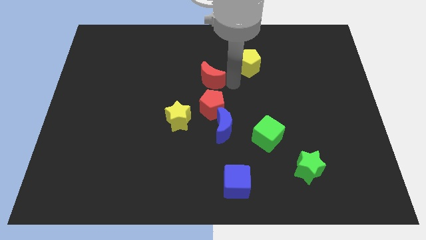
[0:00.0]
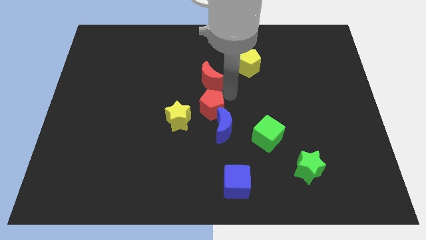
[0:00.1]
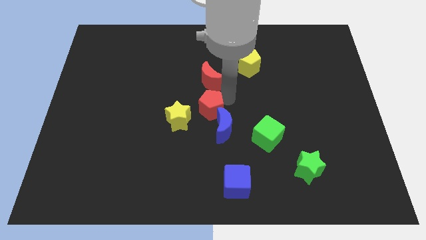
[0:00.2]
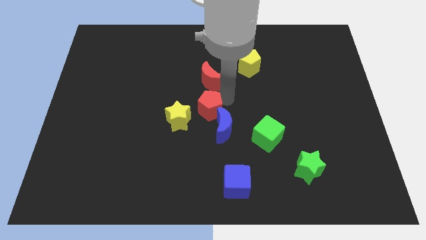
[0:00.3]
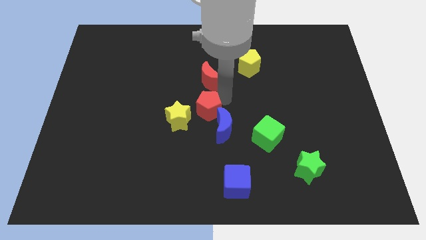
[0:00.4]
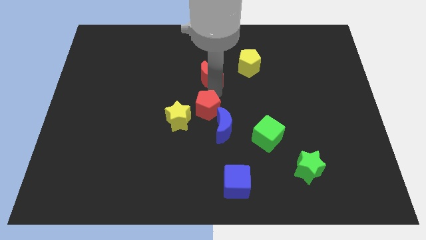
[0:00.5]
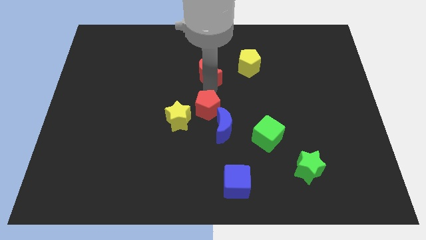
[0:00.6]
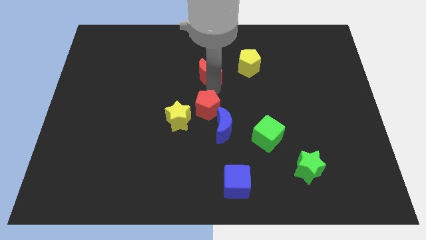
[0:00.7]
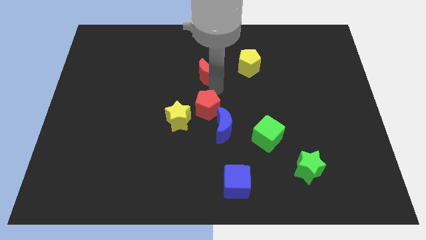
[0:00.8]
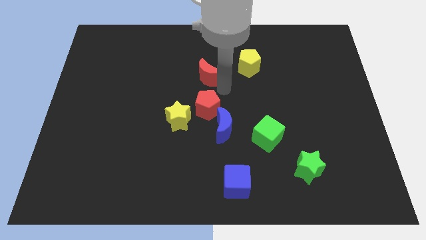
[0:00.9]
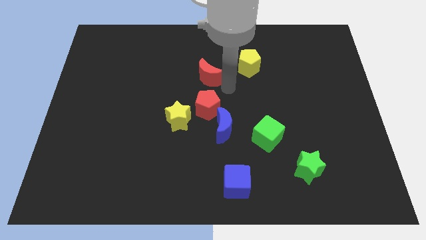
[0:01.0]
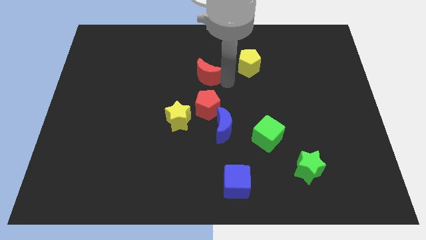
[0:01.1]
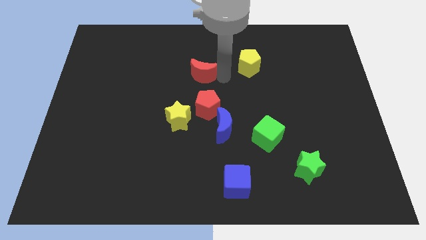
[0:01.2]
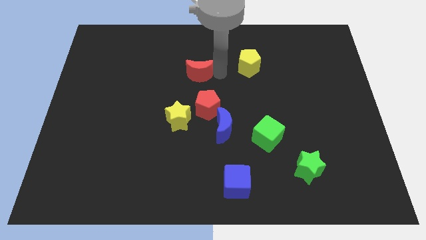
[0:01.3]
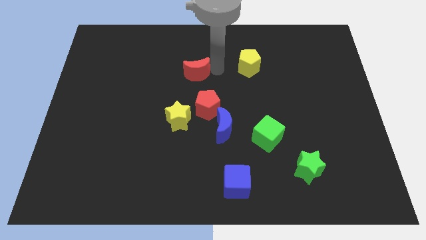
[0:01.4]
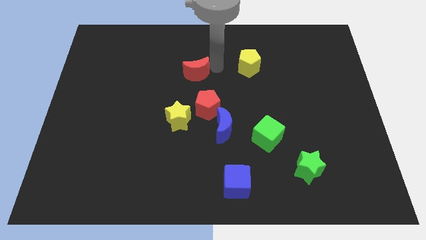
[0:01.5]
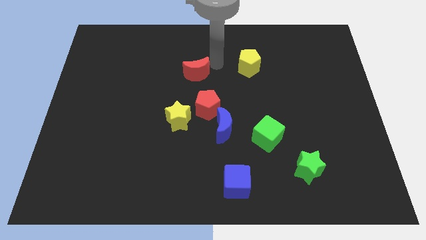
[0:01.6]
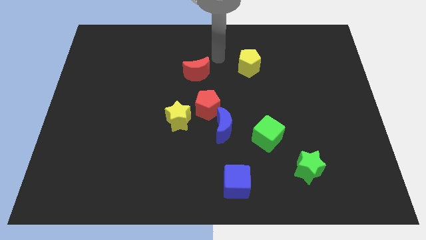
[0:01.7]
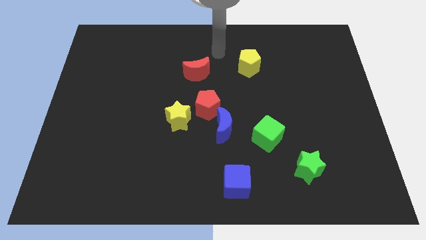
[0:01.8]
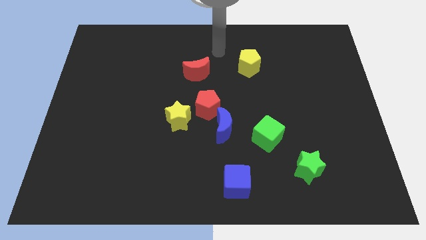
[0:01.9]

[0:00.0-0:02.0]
move the red crescent to the left of the yellow pentagon

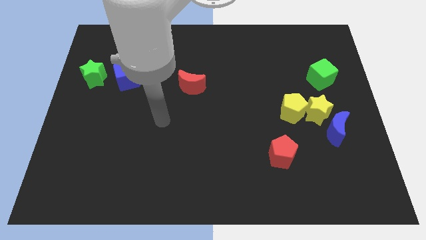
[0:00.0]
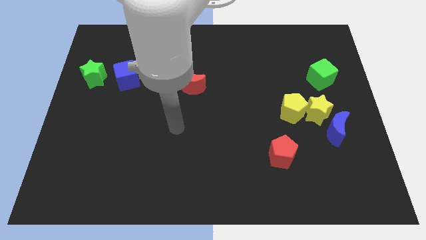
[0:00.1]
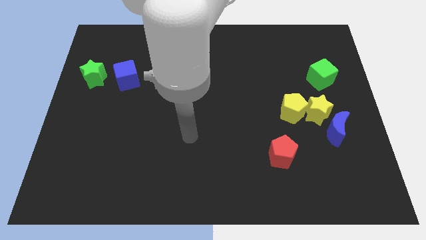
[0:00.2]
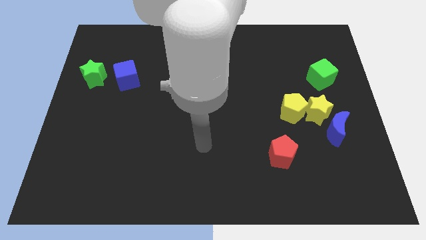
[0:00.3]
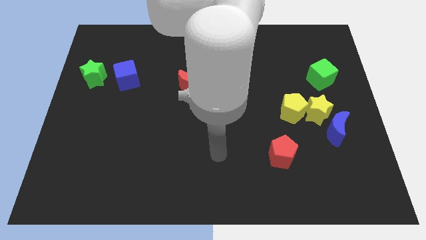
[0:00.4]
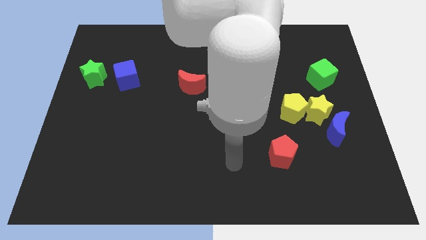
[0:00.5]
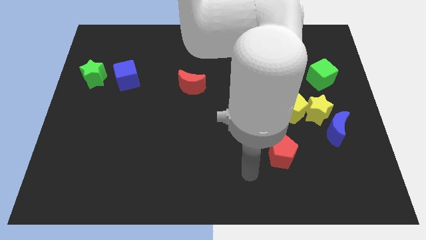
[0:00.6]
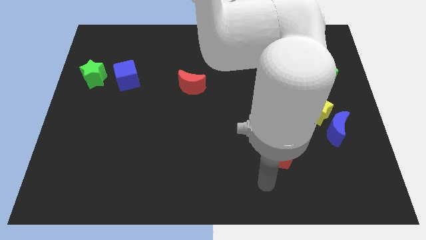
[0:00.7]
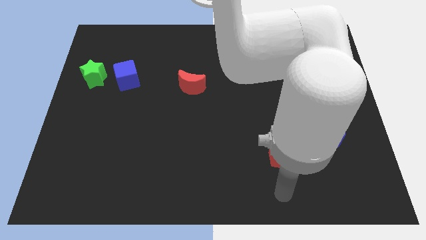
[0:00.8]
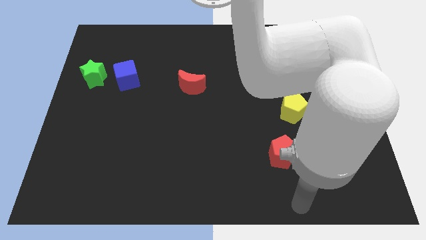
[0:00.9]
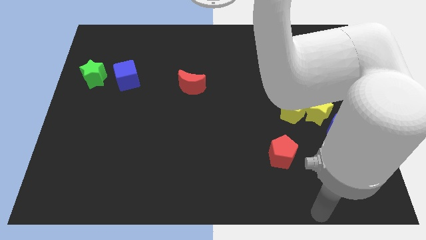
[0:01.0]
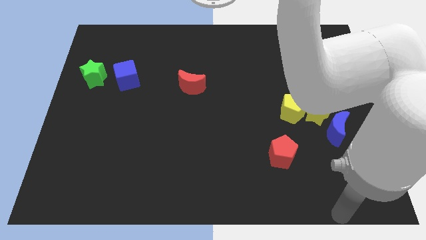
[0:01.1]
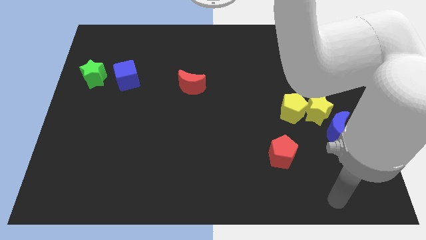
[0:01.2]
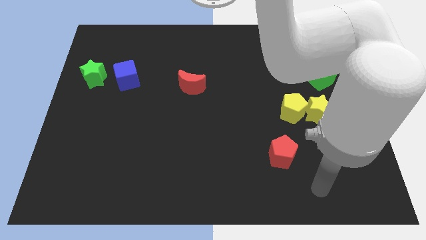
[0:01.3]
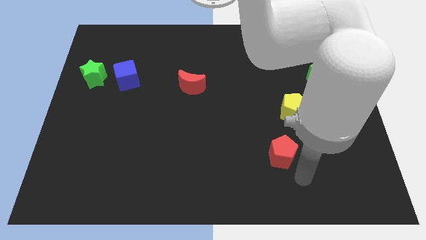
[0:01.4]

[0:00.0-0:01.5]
move arm right below the red pentagon

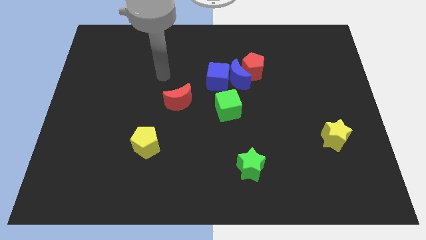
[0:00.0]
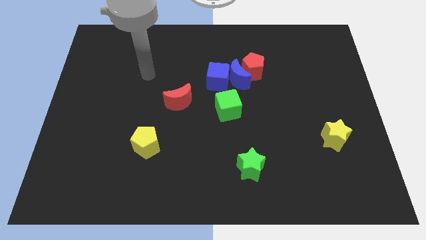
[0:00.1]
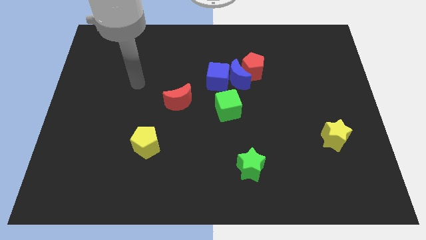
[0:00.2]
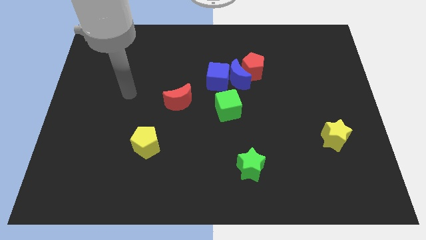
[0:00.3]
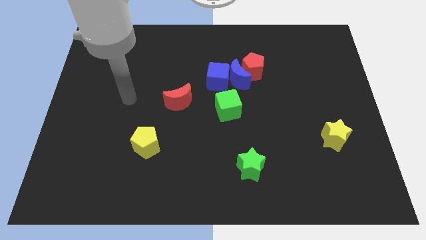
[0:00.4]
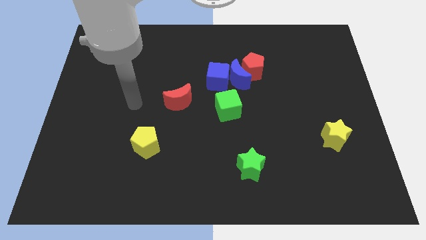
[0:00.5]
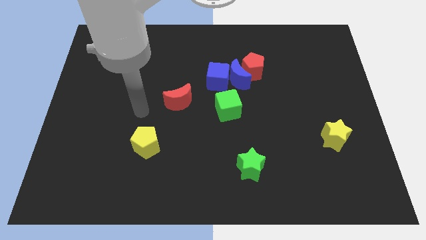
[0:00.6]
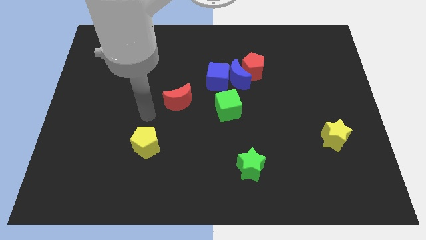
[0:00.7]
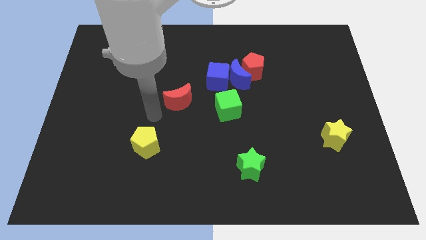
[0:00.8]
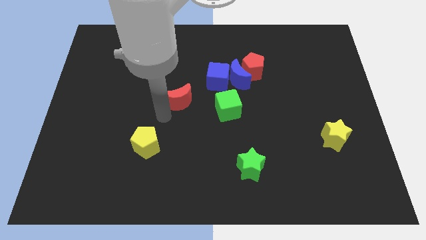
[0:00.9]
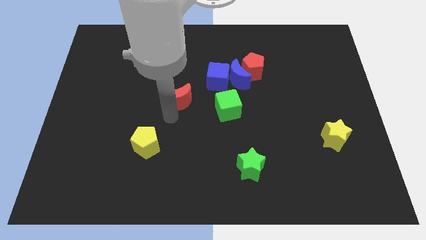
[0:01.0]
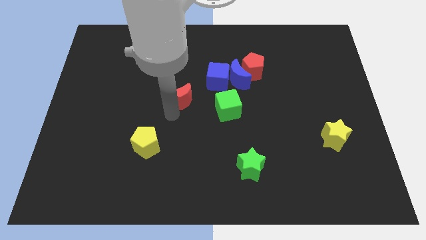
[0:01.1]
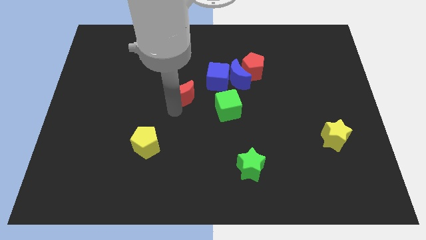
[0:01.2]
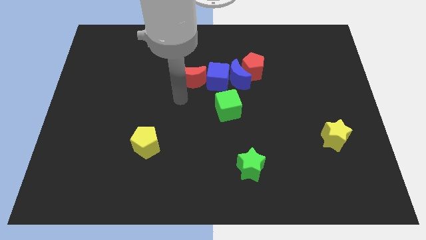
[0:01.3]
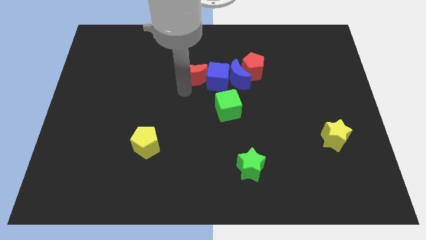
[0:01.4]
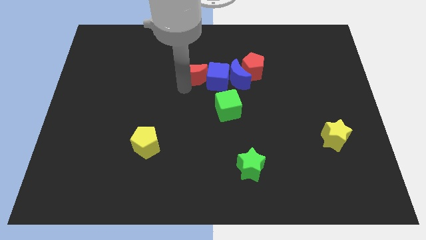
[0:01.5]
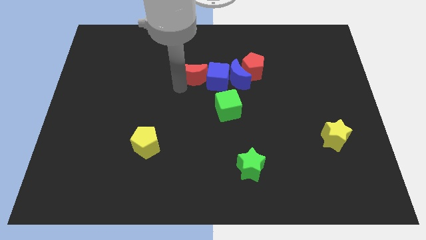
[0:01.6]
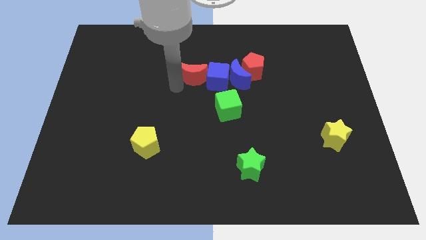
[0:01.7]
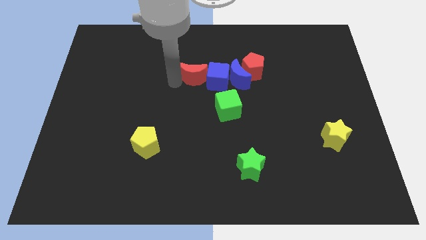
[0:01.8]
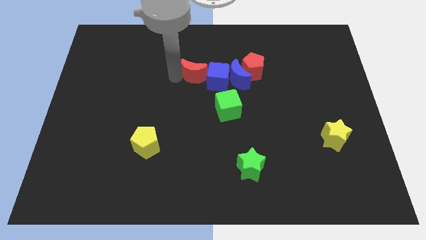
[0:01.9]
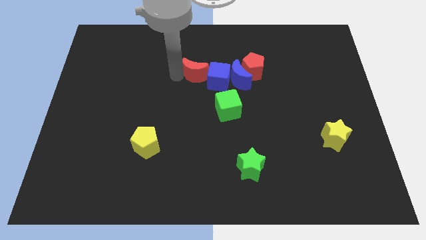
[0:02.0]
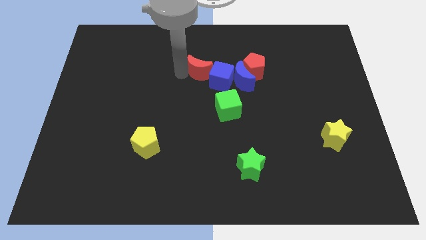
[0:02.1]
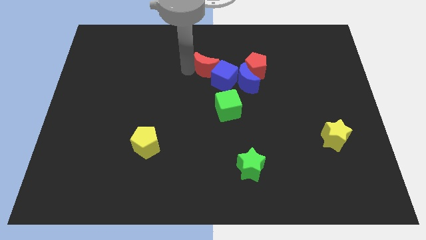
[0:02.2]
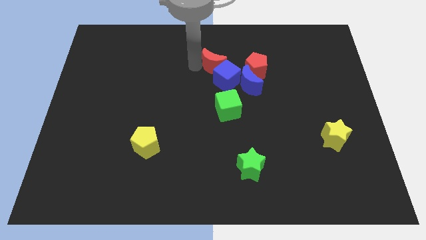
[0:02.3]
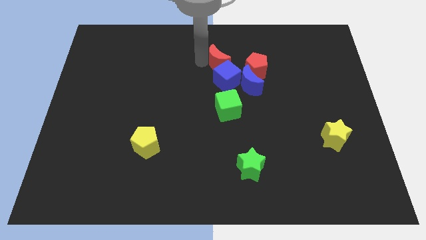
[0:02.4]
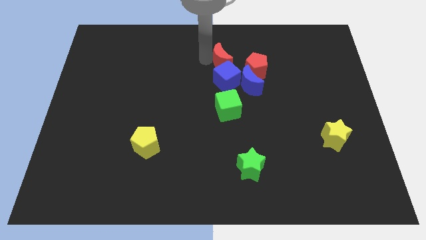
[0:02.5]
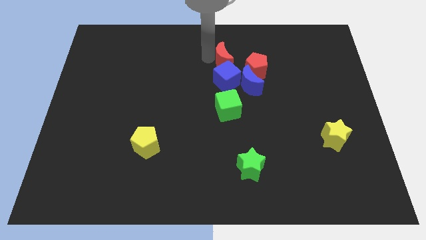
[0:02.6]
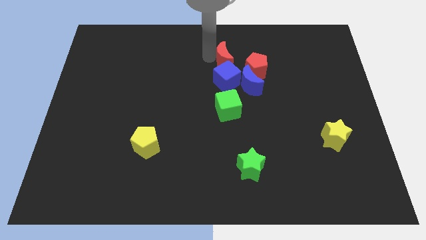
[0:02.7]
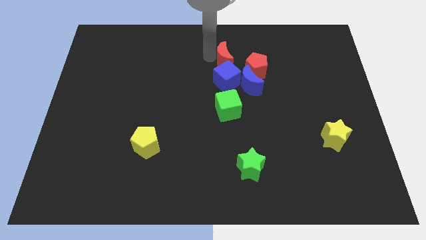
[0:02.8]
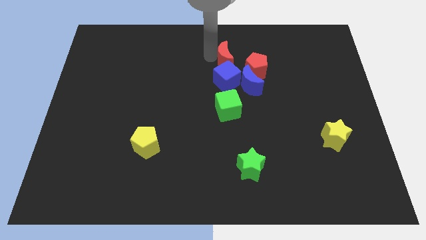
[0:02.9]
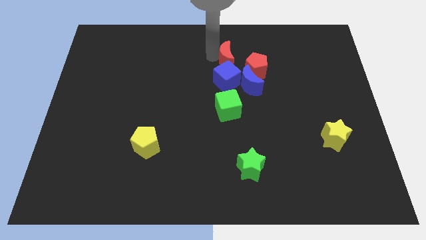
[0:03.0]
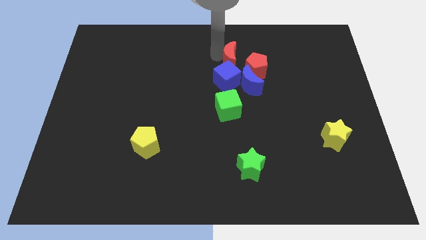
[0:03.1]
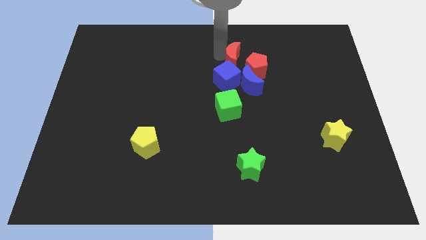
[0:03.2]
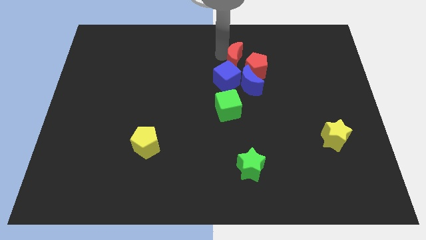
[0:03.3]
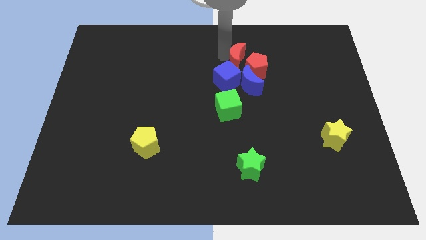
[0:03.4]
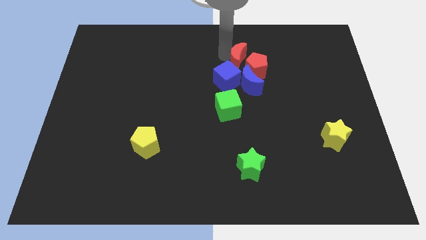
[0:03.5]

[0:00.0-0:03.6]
place red moon left to the red pentagon

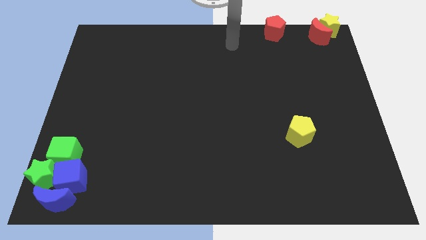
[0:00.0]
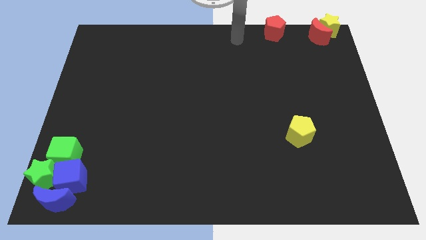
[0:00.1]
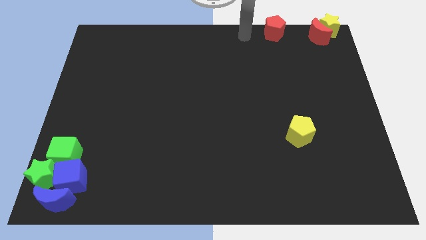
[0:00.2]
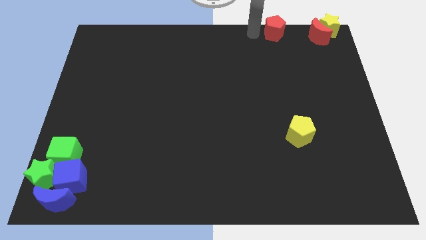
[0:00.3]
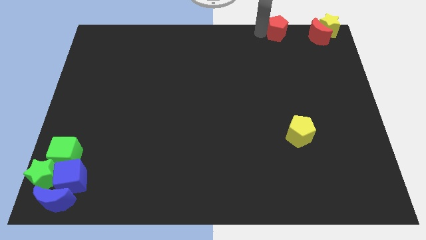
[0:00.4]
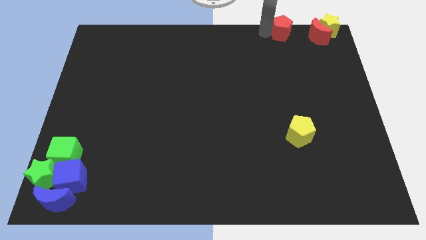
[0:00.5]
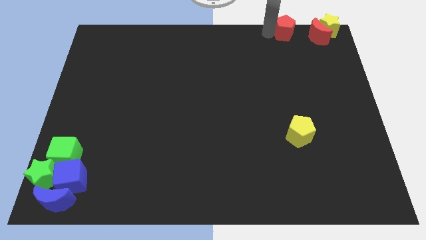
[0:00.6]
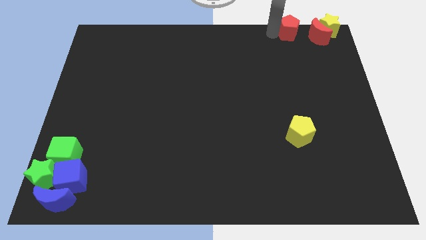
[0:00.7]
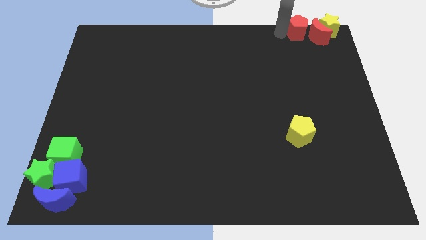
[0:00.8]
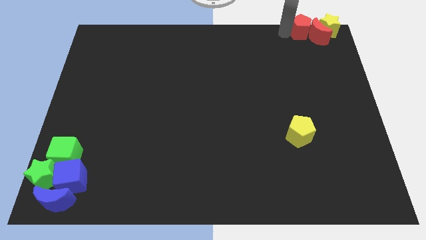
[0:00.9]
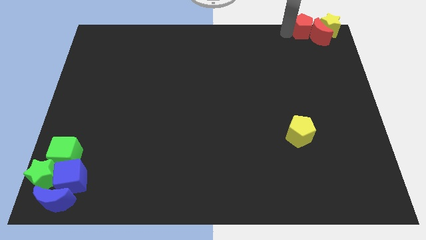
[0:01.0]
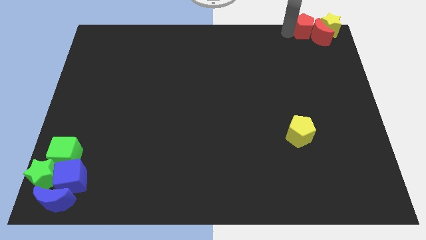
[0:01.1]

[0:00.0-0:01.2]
add red pentagon into red moon

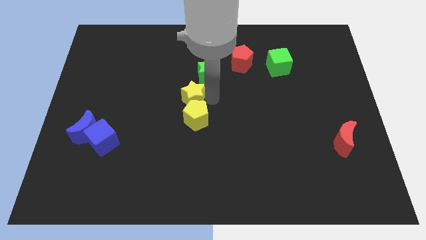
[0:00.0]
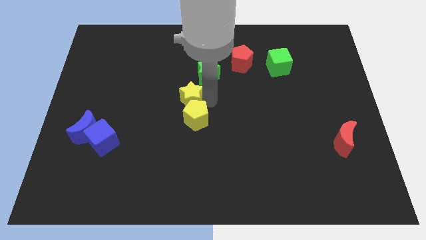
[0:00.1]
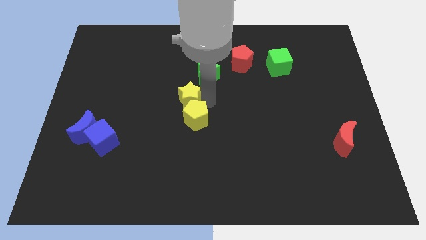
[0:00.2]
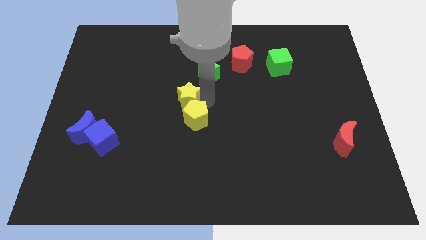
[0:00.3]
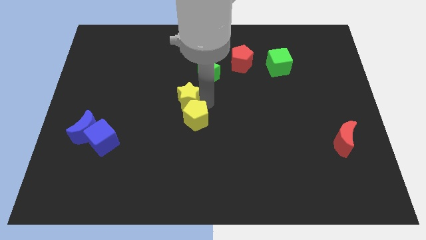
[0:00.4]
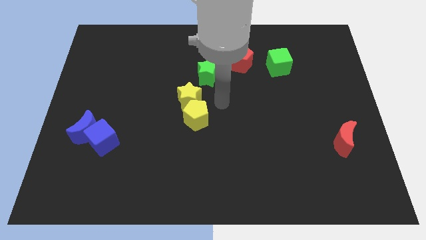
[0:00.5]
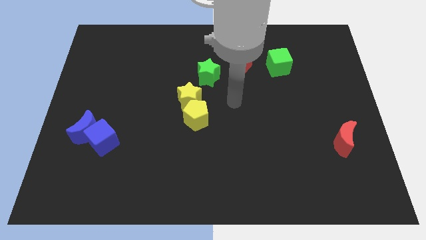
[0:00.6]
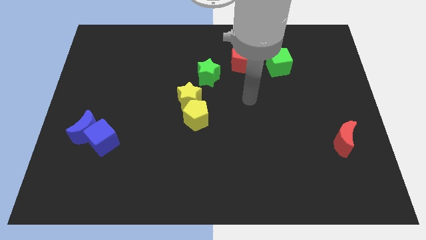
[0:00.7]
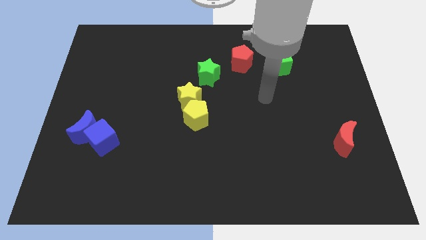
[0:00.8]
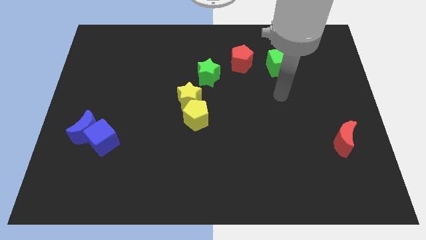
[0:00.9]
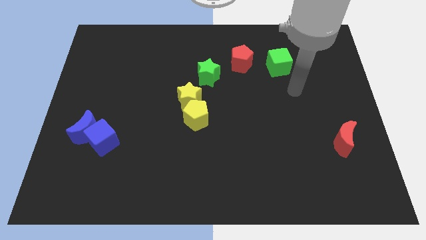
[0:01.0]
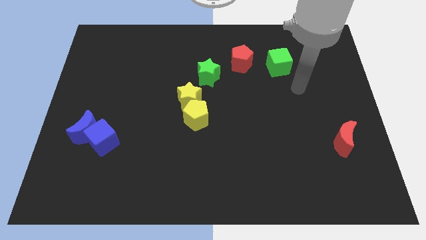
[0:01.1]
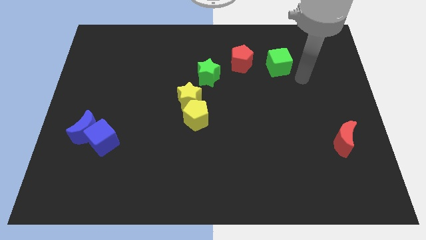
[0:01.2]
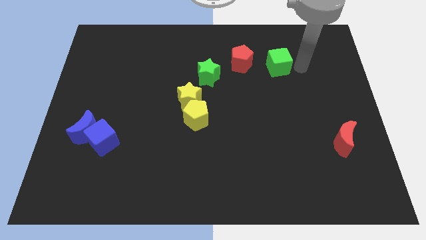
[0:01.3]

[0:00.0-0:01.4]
move the arm to the right of the green cube
